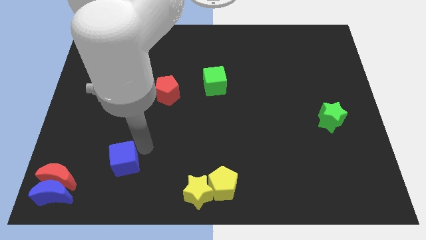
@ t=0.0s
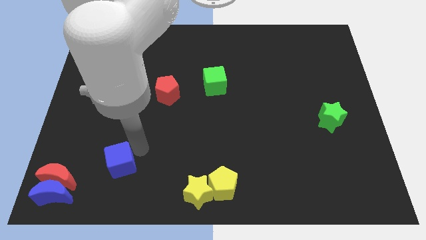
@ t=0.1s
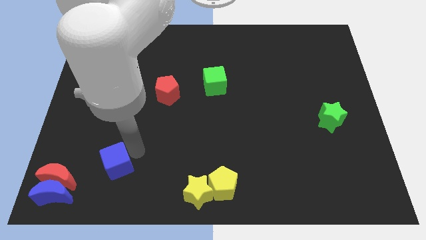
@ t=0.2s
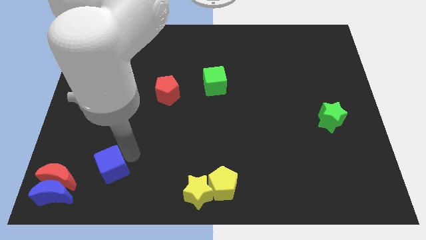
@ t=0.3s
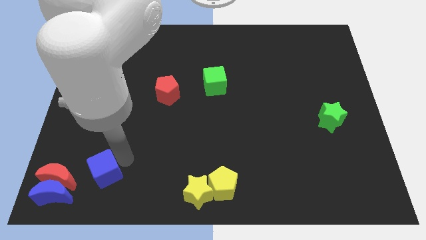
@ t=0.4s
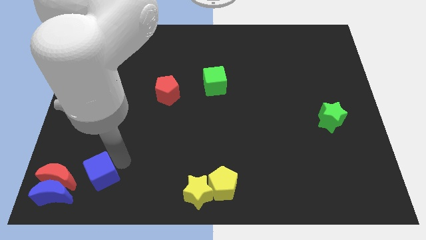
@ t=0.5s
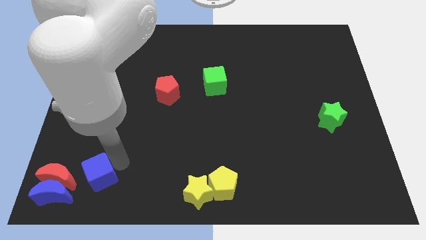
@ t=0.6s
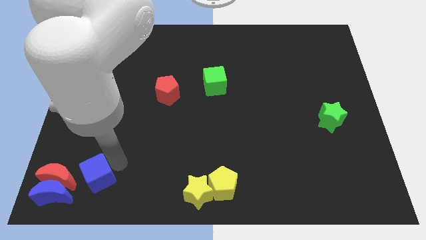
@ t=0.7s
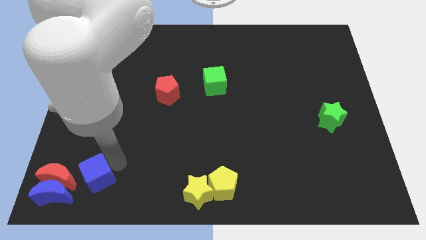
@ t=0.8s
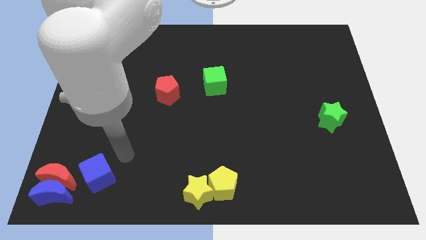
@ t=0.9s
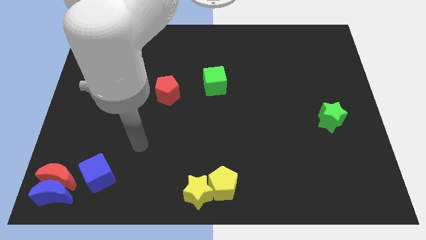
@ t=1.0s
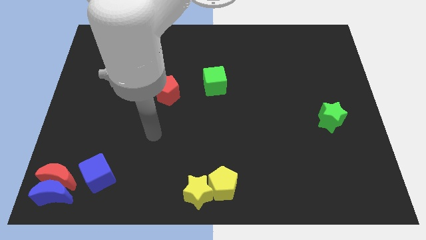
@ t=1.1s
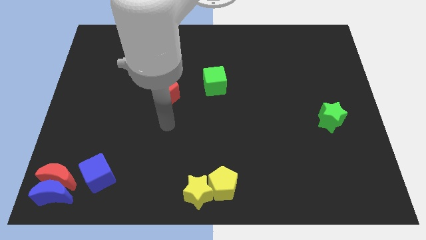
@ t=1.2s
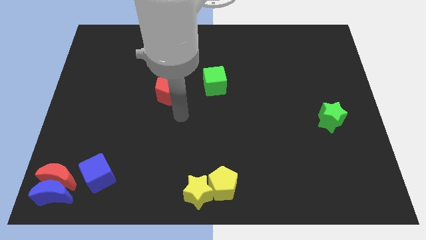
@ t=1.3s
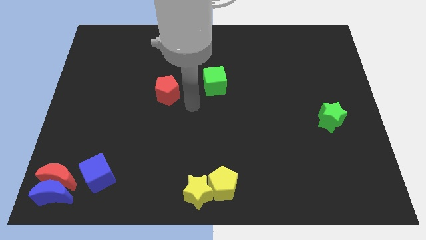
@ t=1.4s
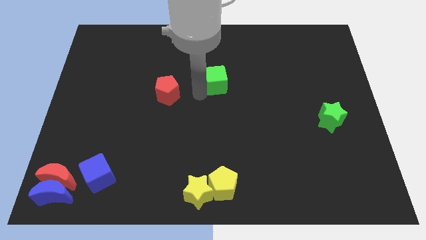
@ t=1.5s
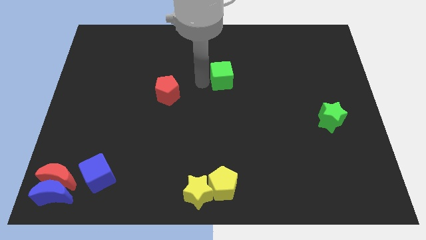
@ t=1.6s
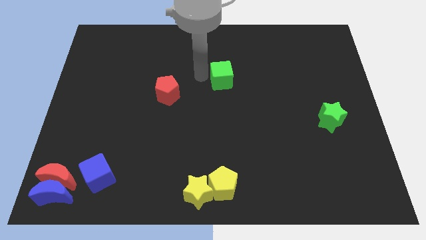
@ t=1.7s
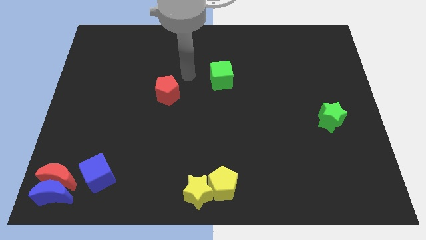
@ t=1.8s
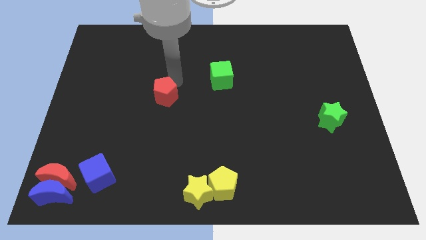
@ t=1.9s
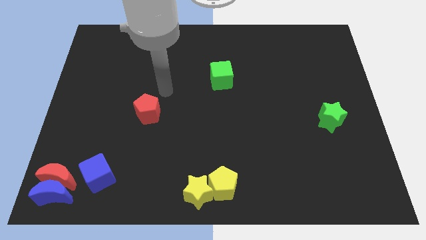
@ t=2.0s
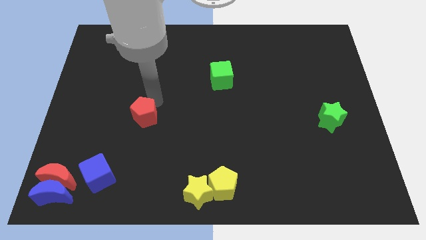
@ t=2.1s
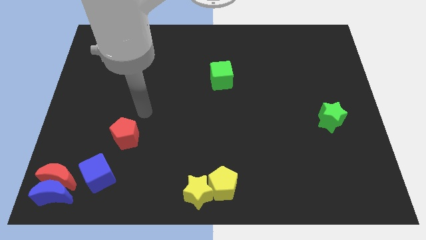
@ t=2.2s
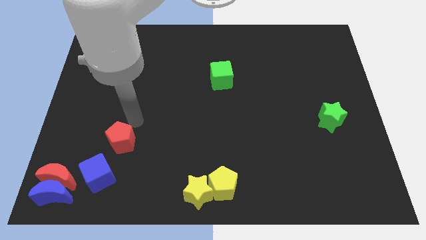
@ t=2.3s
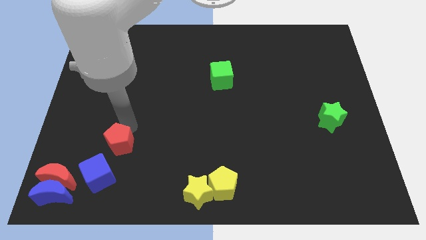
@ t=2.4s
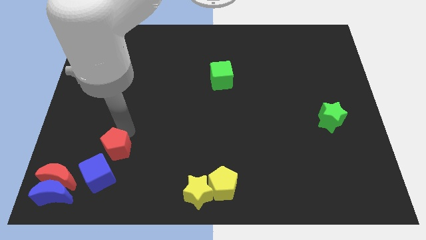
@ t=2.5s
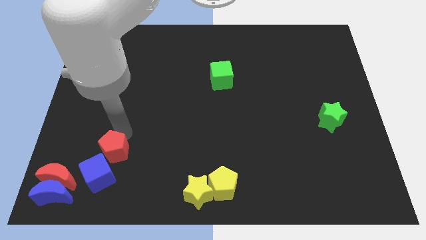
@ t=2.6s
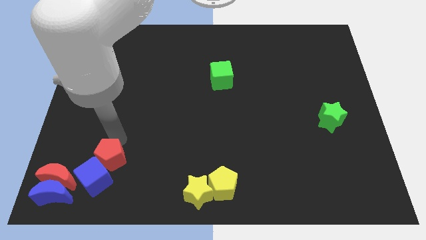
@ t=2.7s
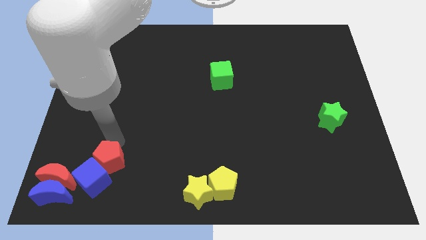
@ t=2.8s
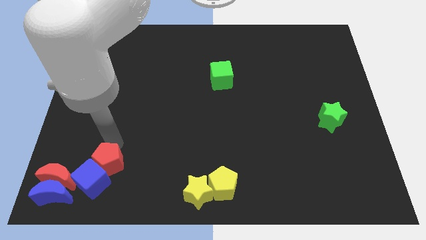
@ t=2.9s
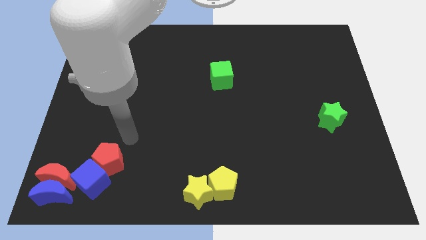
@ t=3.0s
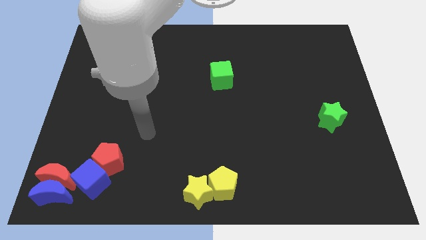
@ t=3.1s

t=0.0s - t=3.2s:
place red pentagon above blue cube

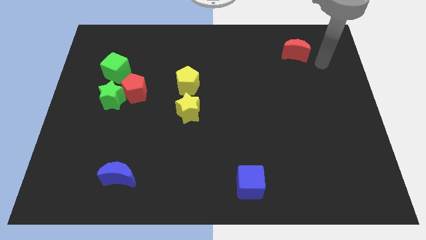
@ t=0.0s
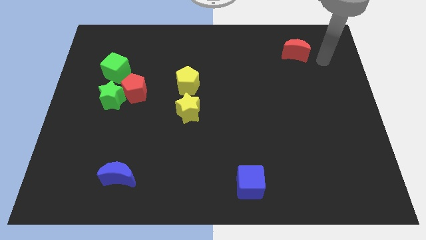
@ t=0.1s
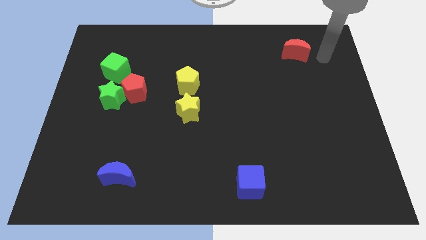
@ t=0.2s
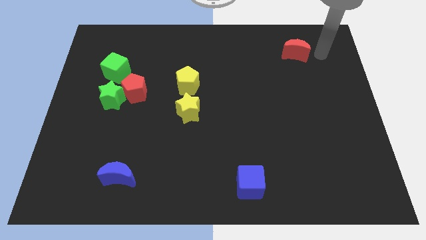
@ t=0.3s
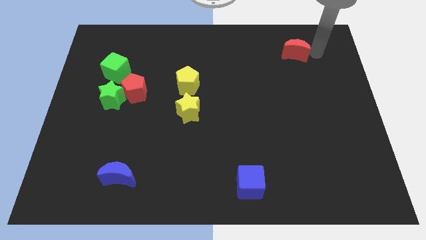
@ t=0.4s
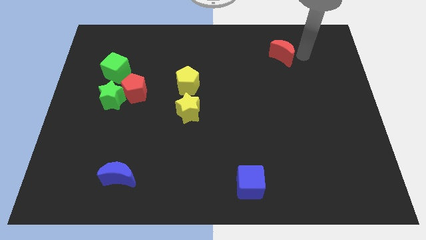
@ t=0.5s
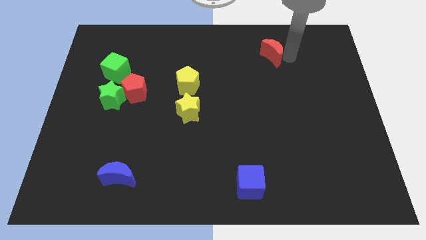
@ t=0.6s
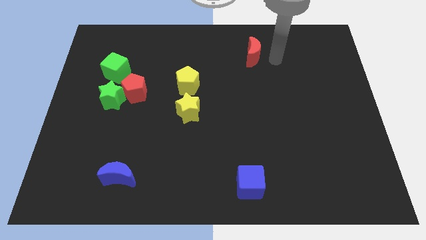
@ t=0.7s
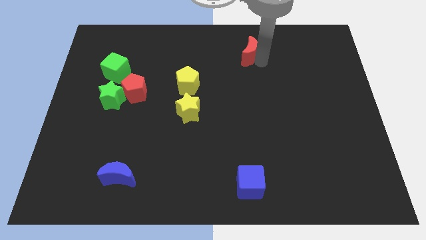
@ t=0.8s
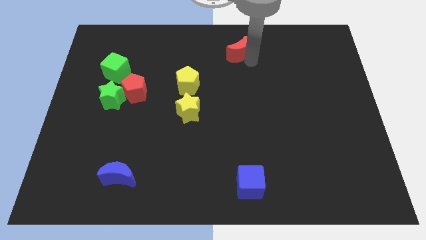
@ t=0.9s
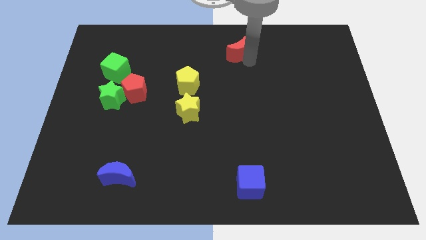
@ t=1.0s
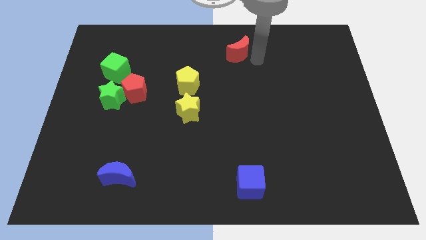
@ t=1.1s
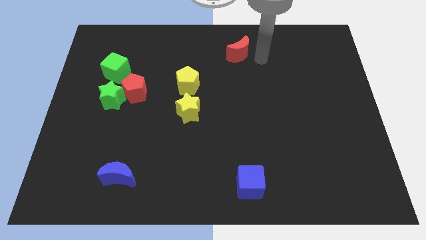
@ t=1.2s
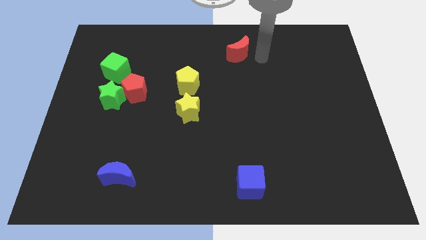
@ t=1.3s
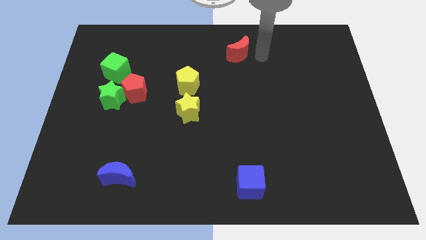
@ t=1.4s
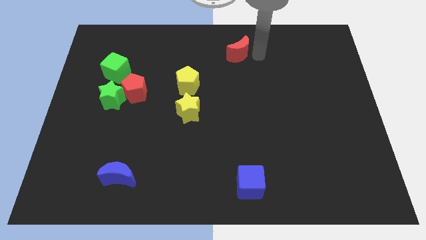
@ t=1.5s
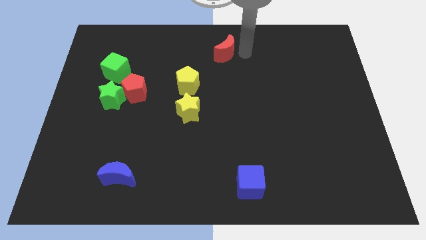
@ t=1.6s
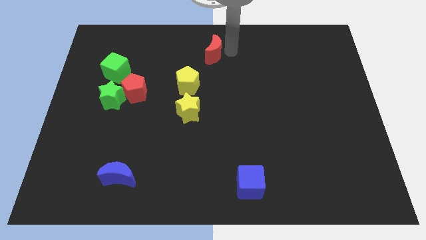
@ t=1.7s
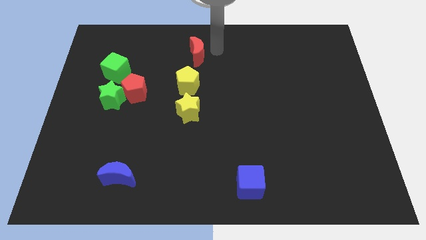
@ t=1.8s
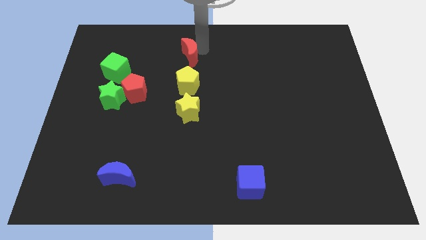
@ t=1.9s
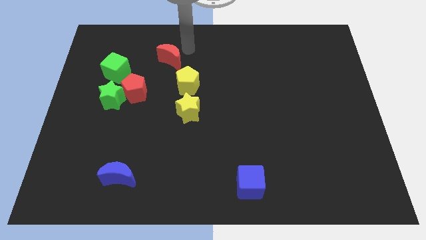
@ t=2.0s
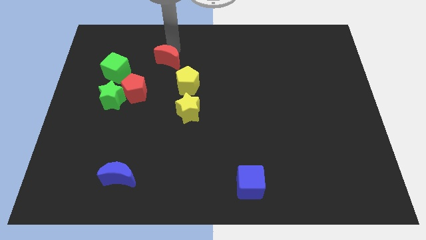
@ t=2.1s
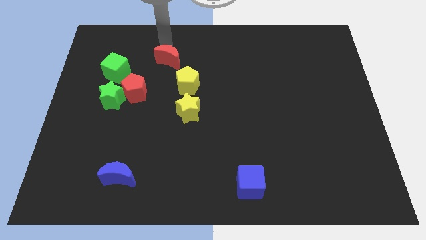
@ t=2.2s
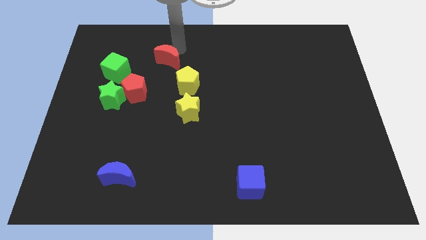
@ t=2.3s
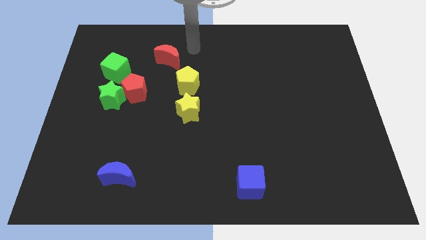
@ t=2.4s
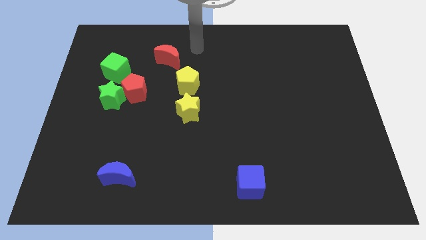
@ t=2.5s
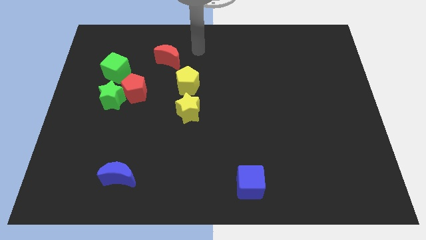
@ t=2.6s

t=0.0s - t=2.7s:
push the red moon to the left side of the board

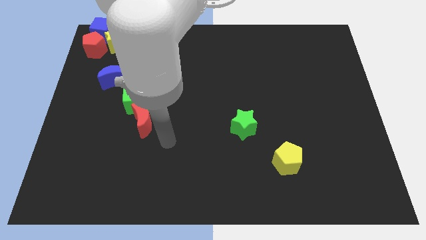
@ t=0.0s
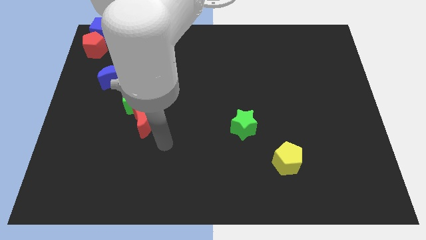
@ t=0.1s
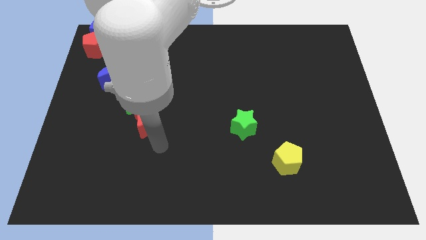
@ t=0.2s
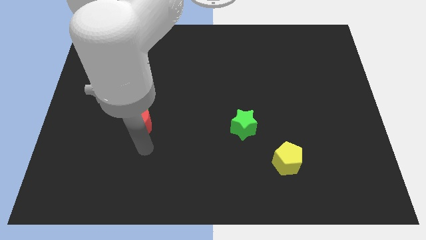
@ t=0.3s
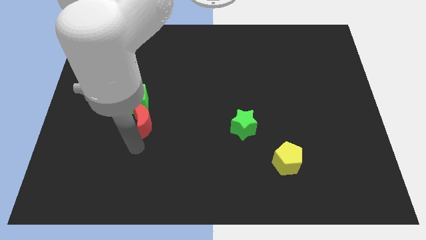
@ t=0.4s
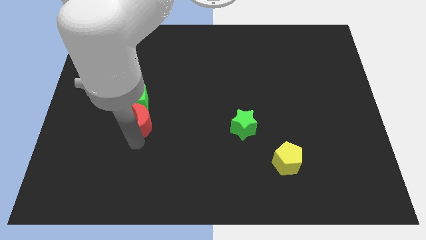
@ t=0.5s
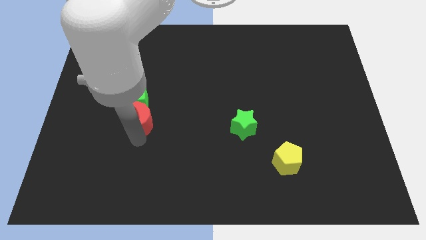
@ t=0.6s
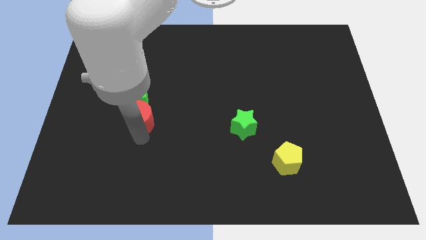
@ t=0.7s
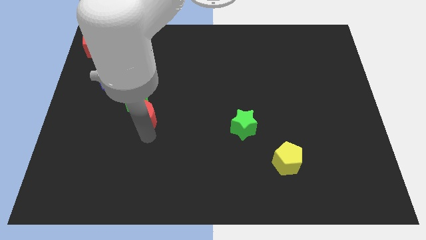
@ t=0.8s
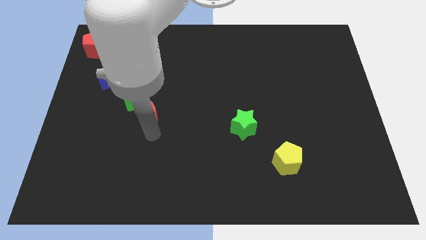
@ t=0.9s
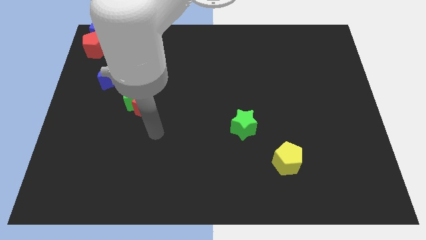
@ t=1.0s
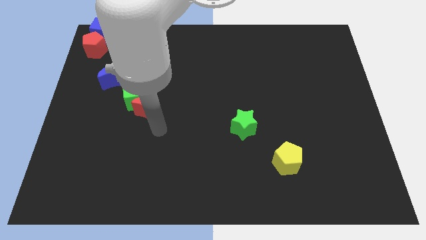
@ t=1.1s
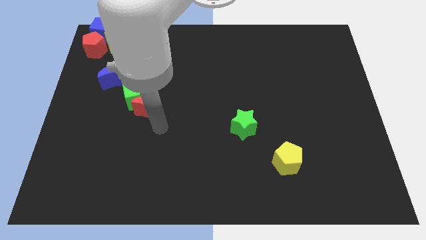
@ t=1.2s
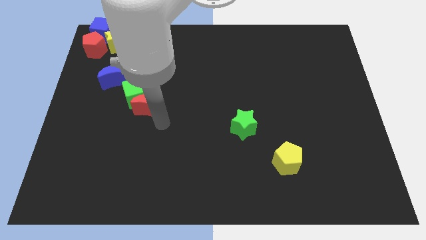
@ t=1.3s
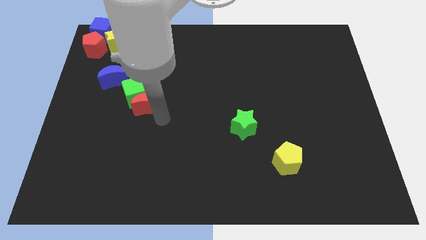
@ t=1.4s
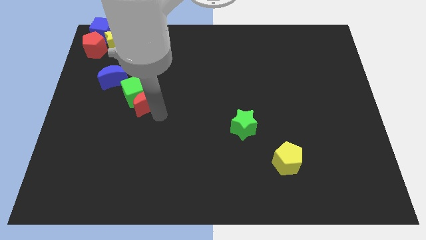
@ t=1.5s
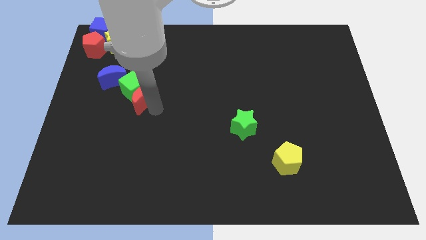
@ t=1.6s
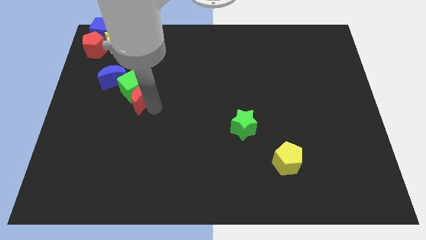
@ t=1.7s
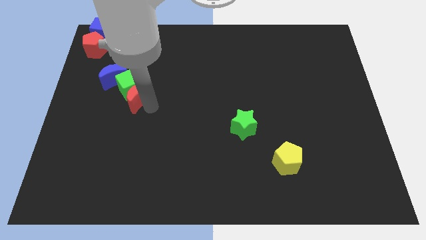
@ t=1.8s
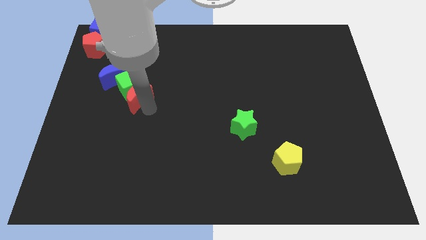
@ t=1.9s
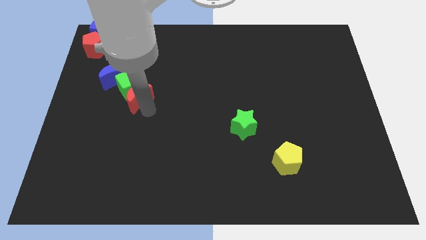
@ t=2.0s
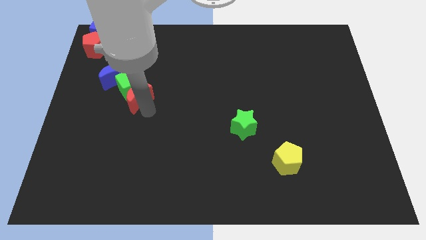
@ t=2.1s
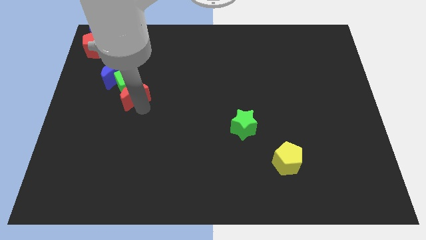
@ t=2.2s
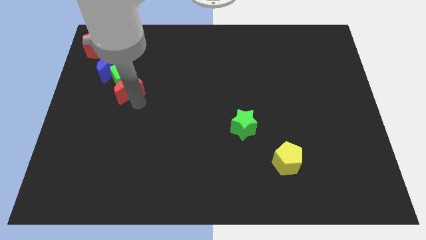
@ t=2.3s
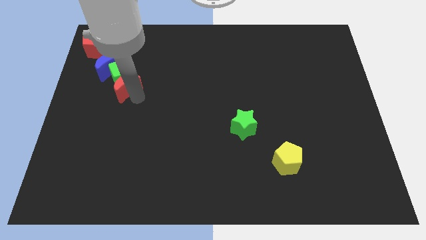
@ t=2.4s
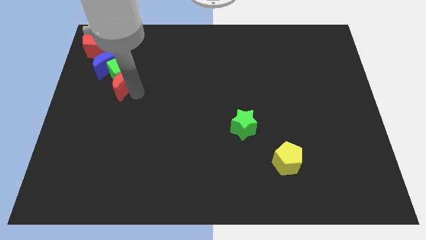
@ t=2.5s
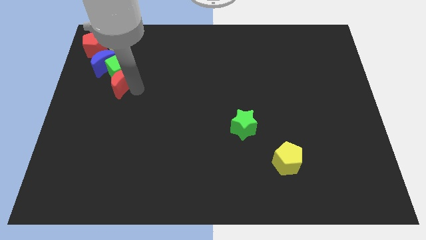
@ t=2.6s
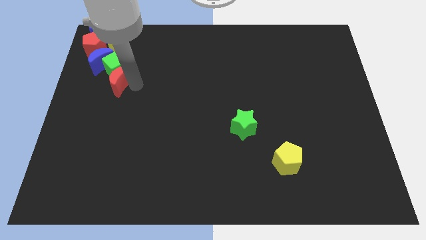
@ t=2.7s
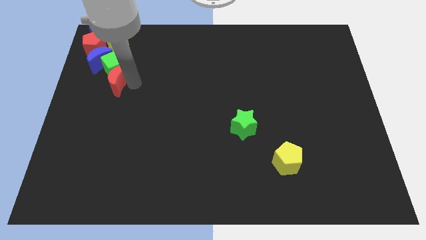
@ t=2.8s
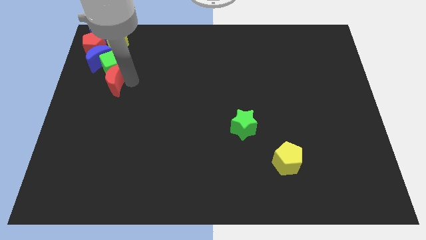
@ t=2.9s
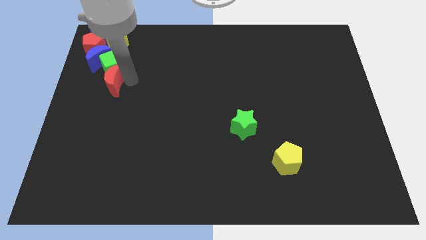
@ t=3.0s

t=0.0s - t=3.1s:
slide the red moongreen cube and blue moon towards top left
